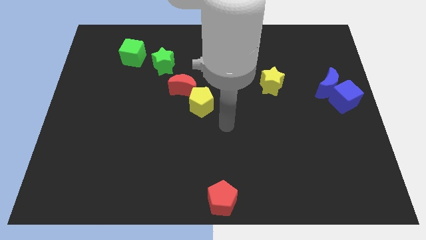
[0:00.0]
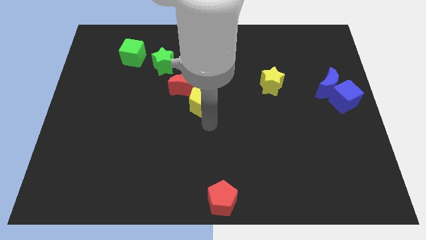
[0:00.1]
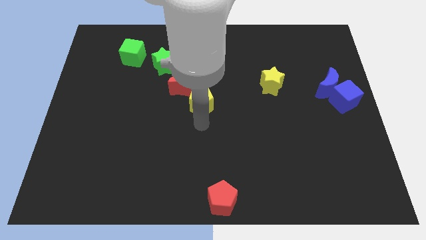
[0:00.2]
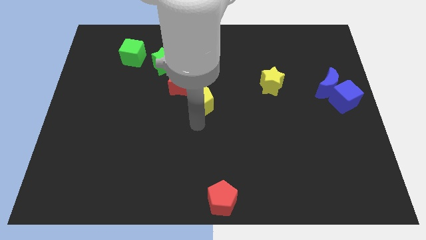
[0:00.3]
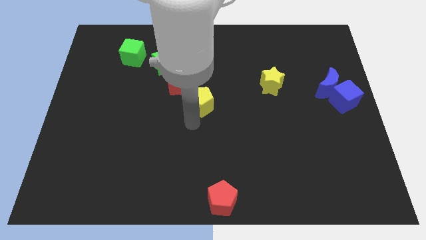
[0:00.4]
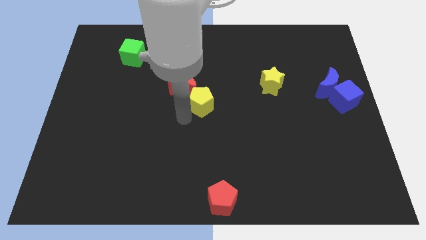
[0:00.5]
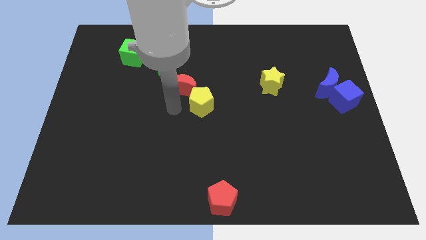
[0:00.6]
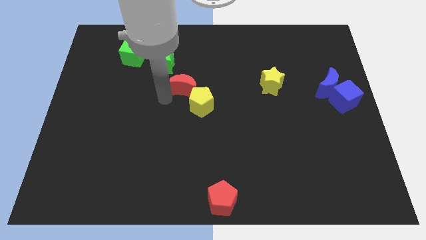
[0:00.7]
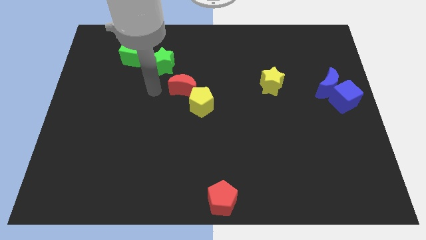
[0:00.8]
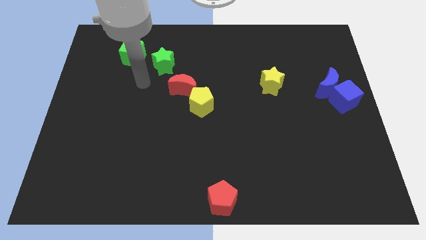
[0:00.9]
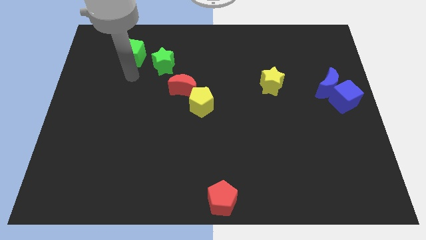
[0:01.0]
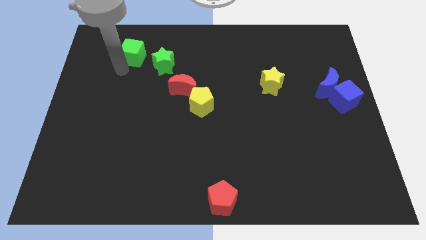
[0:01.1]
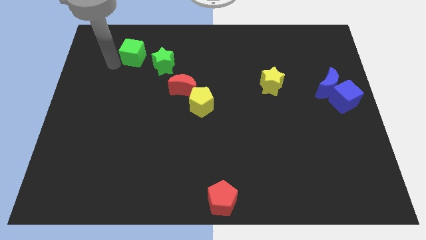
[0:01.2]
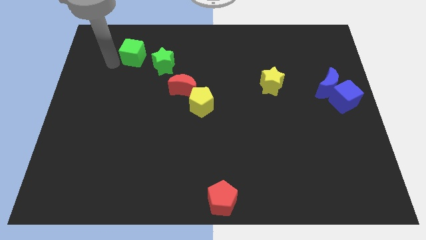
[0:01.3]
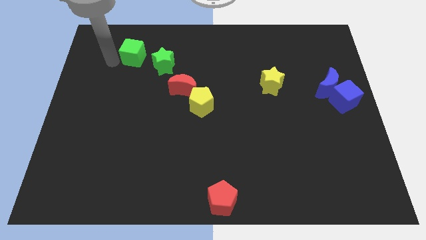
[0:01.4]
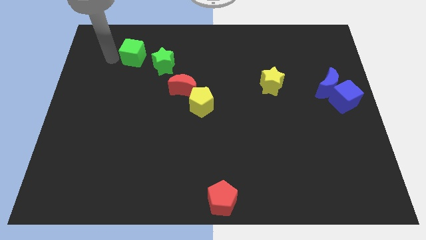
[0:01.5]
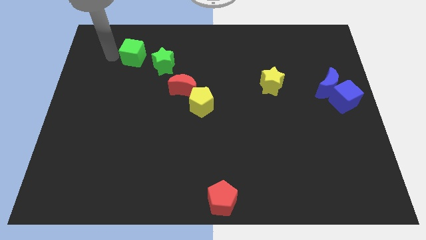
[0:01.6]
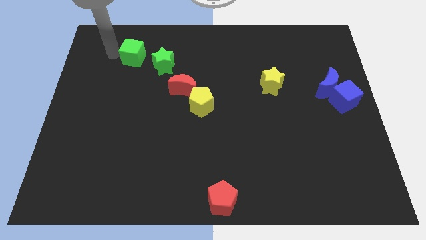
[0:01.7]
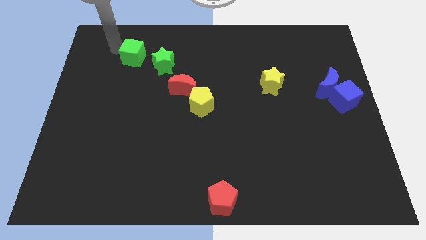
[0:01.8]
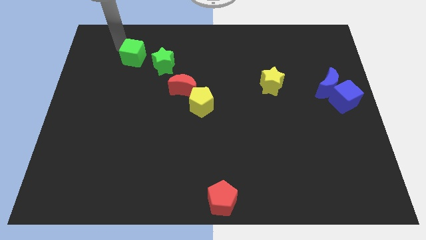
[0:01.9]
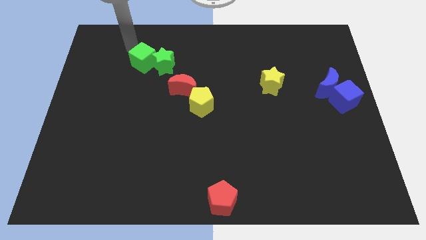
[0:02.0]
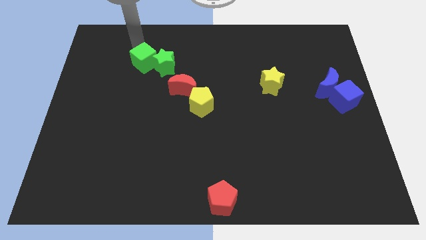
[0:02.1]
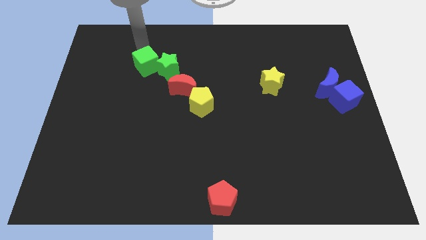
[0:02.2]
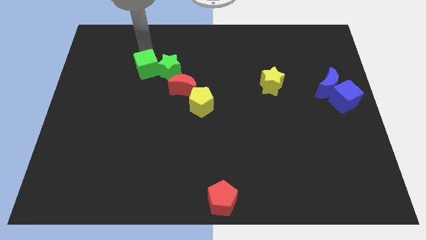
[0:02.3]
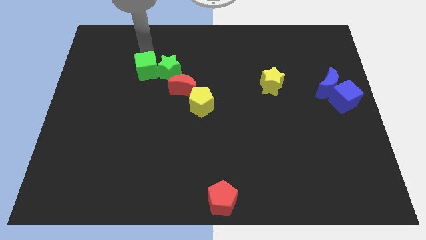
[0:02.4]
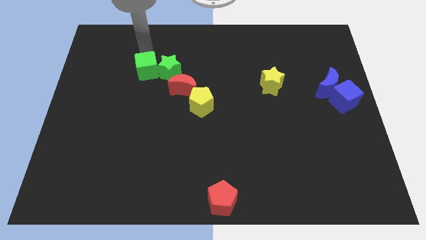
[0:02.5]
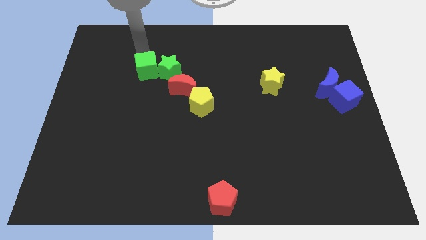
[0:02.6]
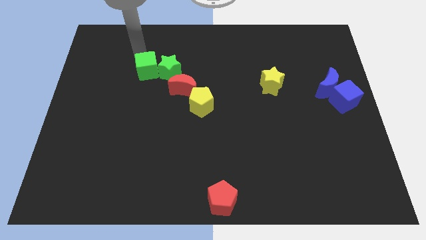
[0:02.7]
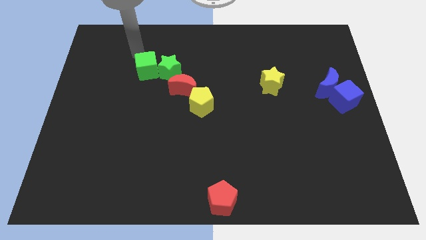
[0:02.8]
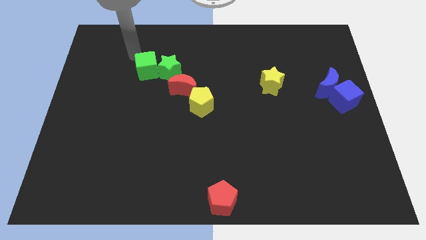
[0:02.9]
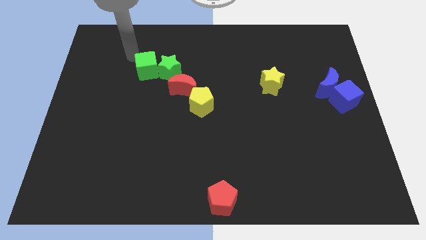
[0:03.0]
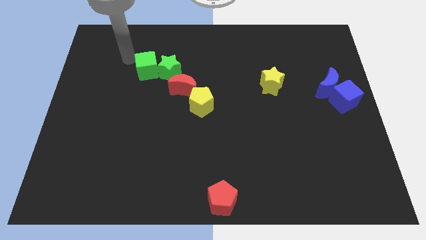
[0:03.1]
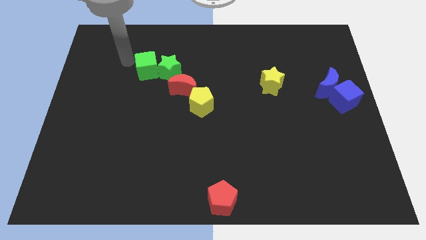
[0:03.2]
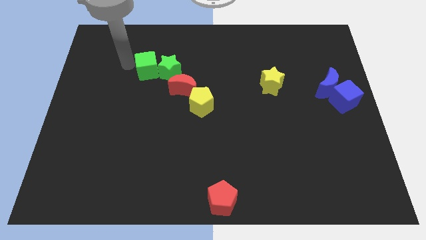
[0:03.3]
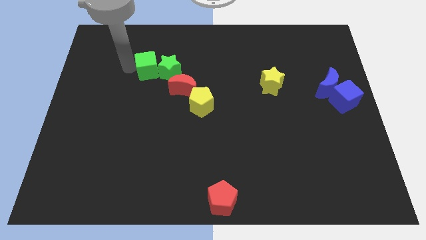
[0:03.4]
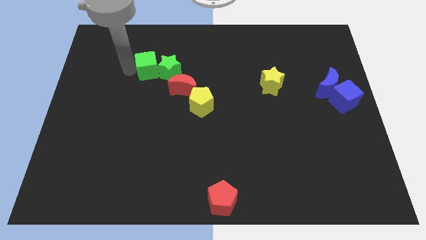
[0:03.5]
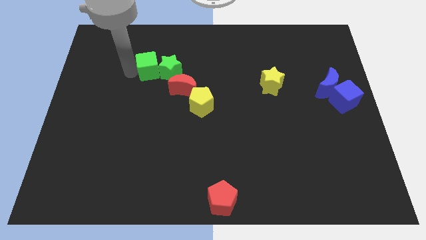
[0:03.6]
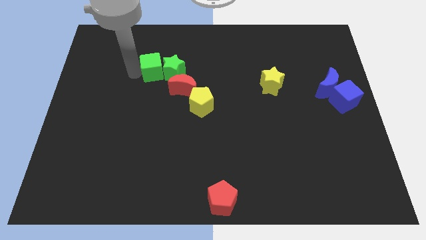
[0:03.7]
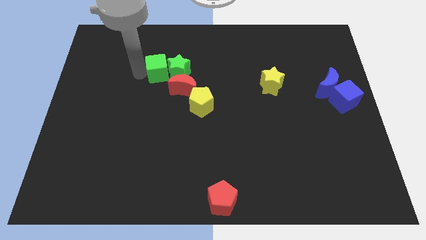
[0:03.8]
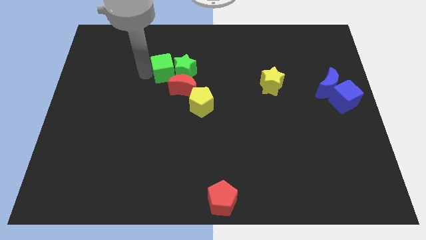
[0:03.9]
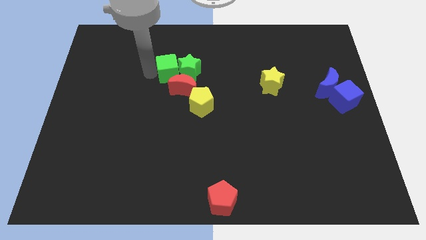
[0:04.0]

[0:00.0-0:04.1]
push green cube in to green star

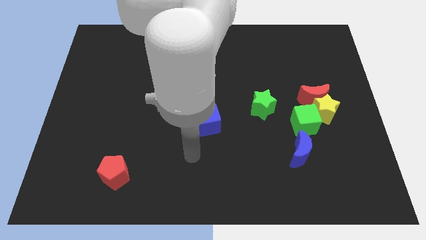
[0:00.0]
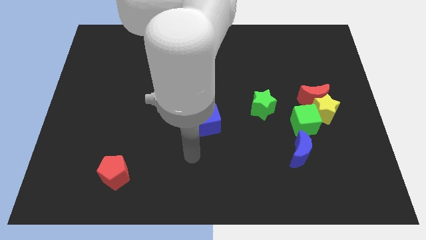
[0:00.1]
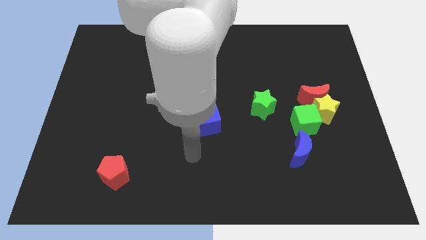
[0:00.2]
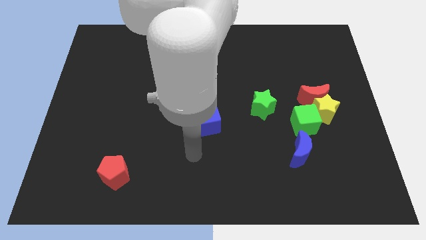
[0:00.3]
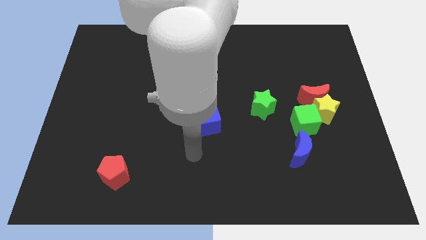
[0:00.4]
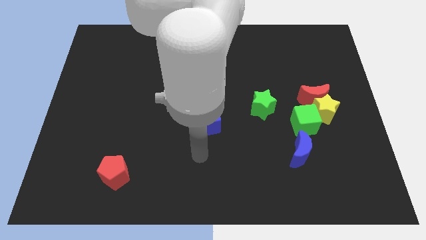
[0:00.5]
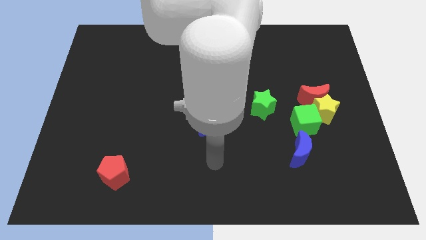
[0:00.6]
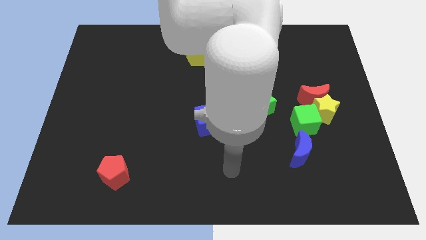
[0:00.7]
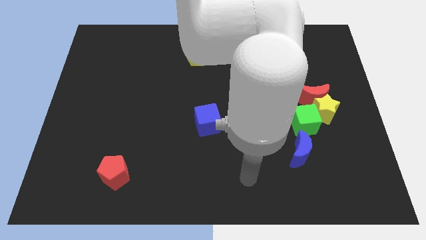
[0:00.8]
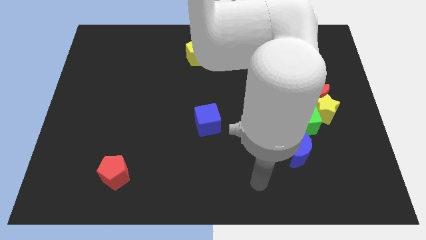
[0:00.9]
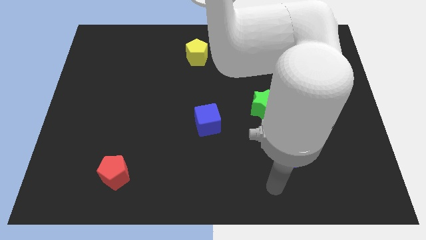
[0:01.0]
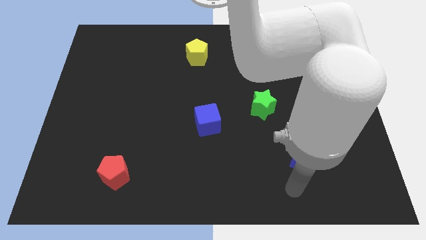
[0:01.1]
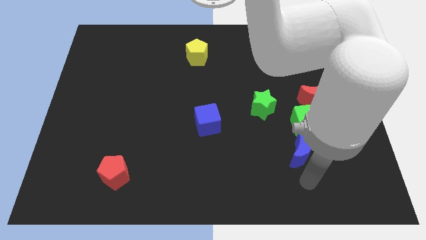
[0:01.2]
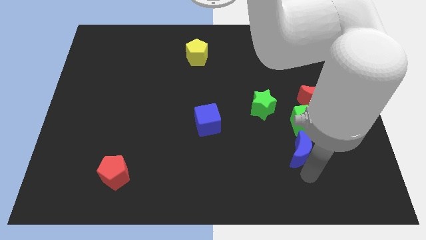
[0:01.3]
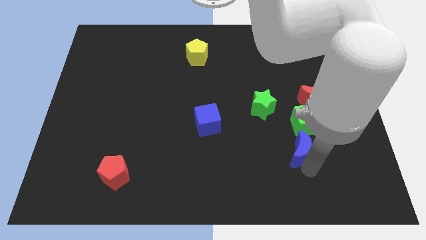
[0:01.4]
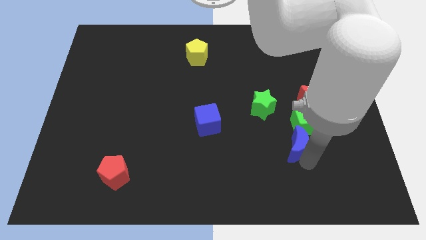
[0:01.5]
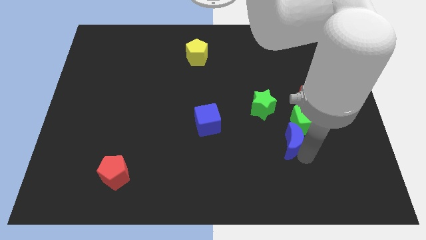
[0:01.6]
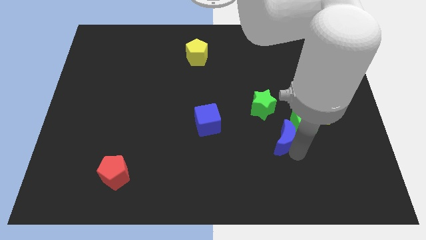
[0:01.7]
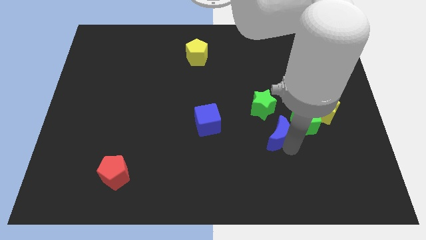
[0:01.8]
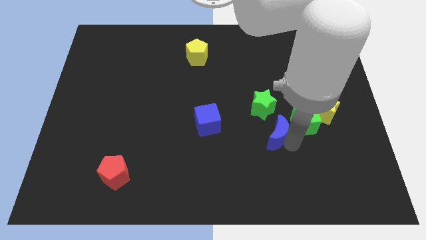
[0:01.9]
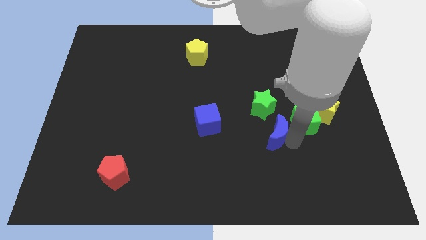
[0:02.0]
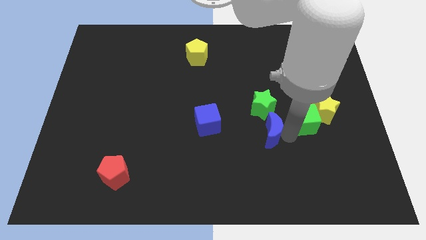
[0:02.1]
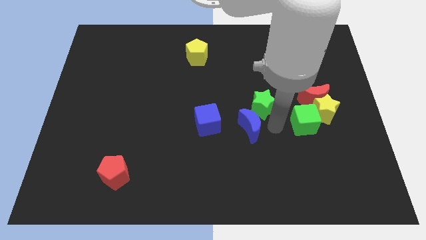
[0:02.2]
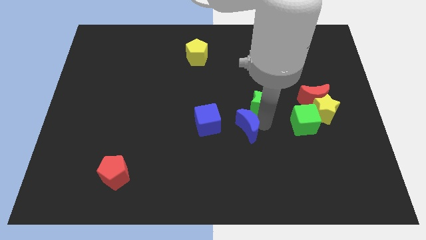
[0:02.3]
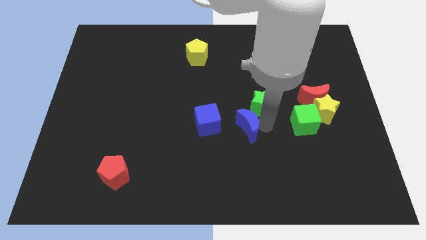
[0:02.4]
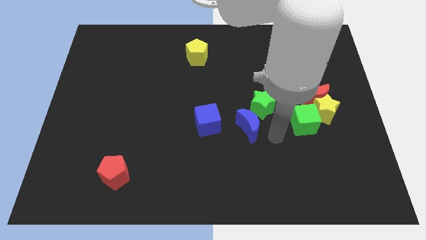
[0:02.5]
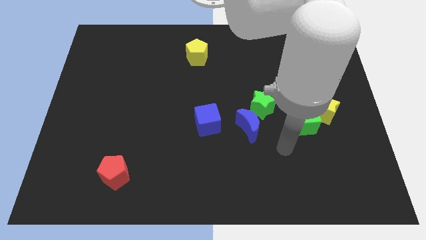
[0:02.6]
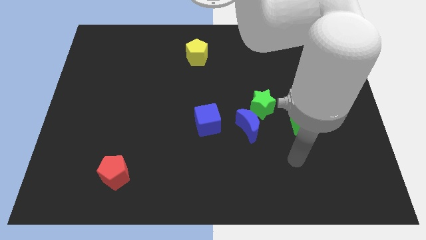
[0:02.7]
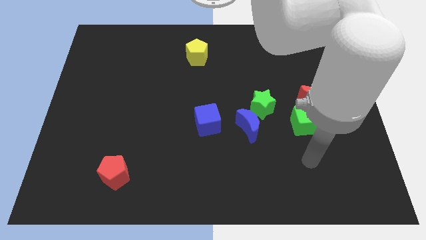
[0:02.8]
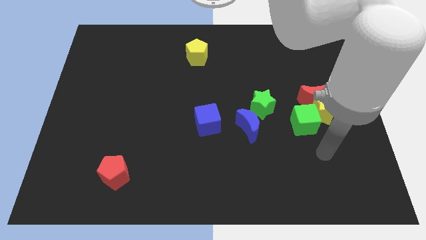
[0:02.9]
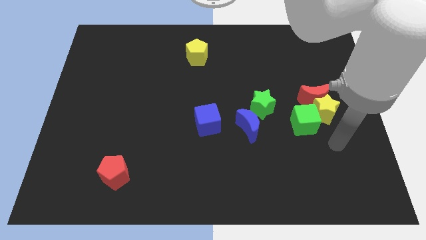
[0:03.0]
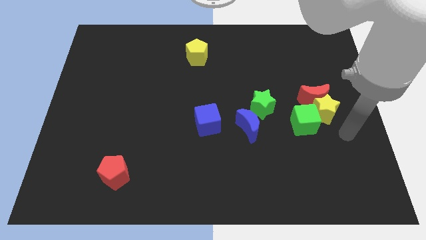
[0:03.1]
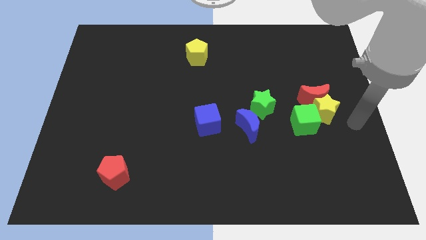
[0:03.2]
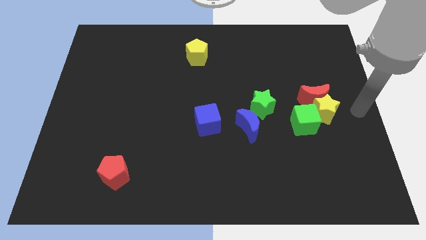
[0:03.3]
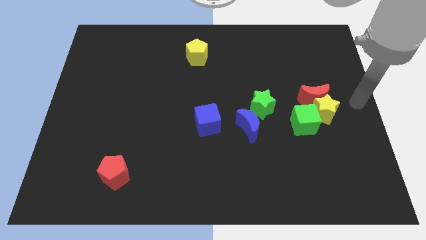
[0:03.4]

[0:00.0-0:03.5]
slightly move the blue moon towards center

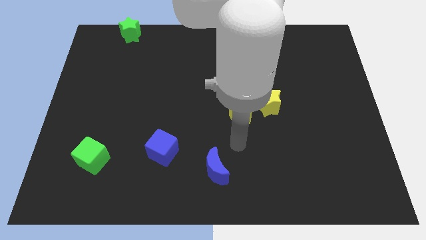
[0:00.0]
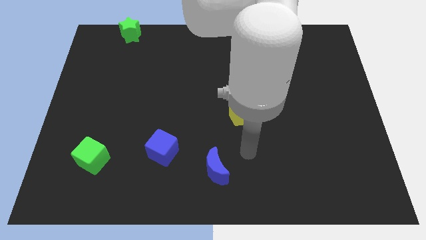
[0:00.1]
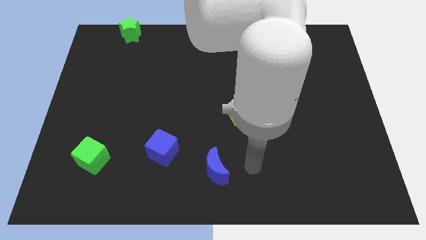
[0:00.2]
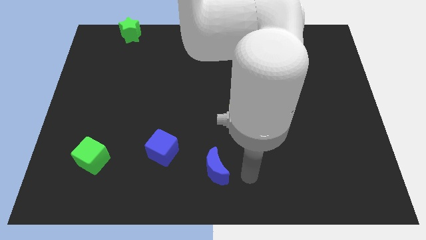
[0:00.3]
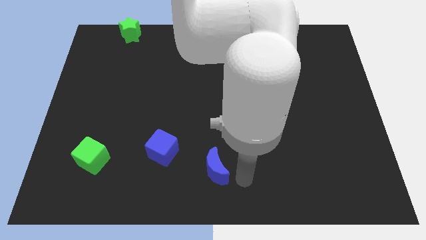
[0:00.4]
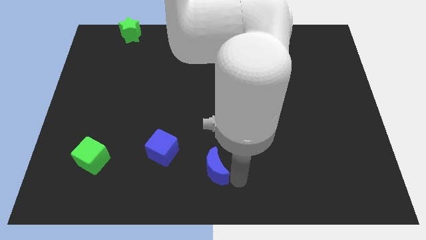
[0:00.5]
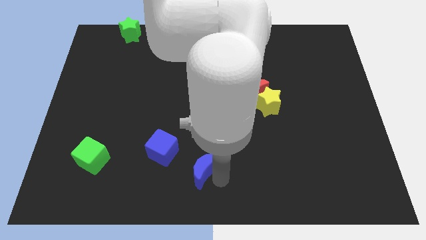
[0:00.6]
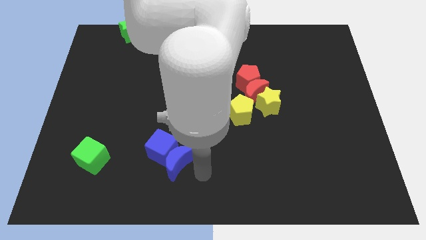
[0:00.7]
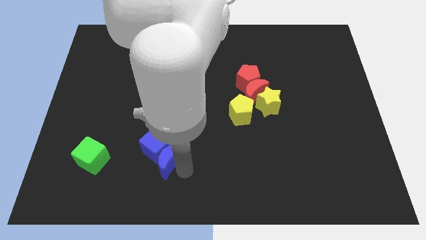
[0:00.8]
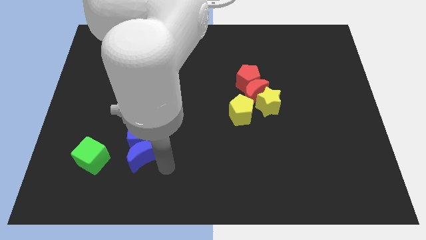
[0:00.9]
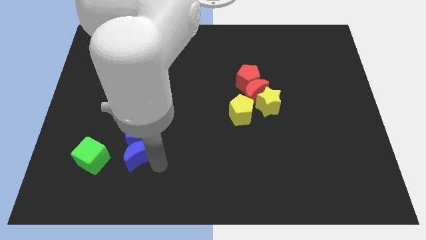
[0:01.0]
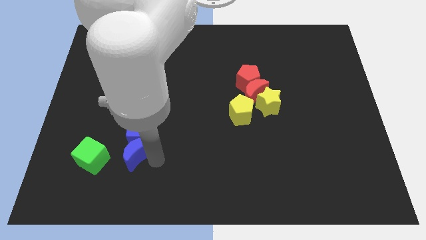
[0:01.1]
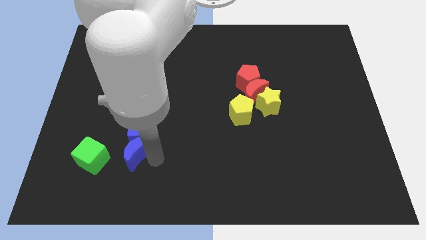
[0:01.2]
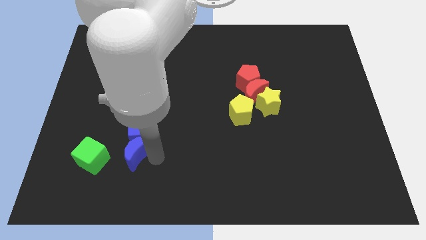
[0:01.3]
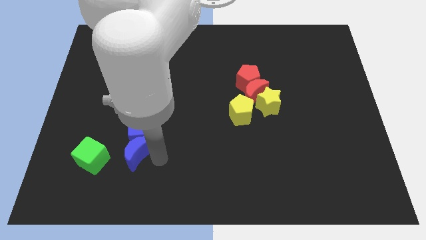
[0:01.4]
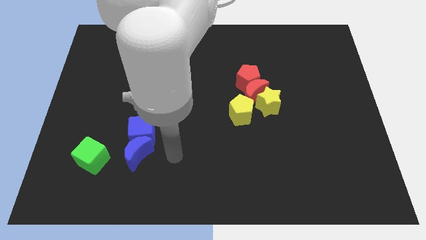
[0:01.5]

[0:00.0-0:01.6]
push the blue moon into the blue cube
